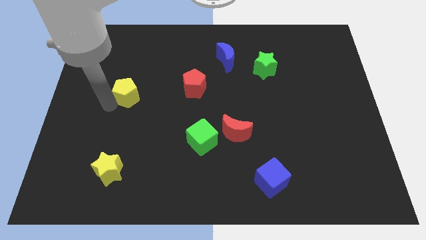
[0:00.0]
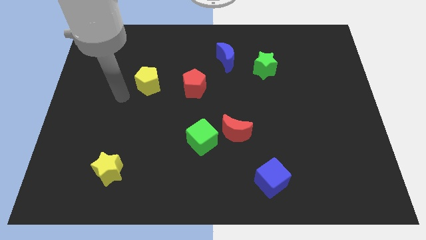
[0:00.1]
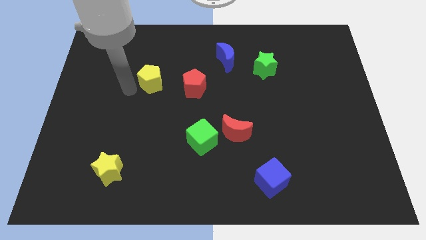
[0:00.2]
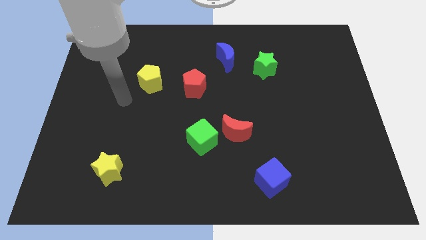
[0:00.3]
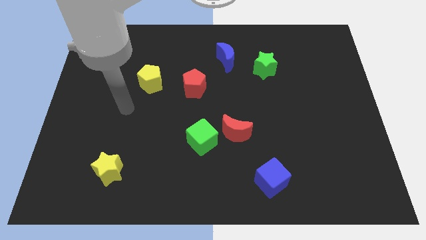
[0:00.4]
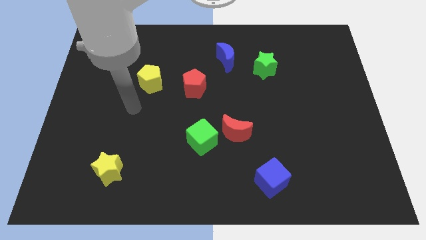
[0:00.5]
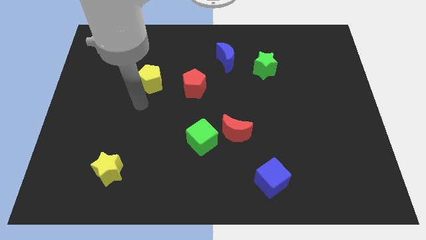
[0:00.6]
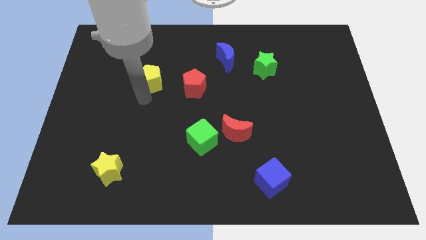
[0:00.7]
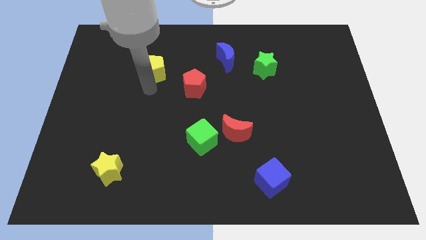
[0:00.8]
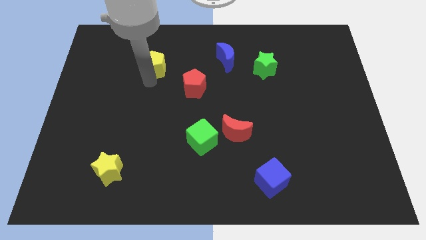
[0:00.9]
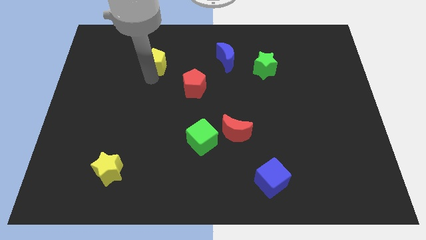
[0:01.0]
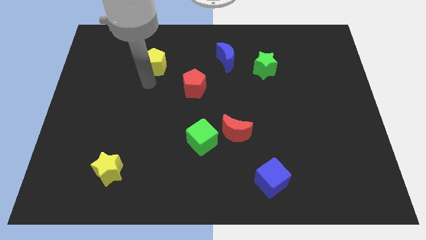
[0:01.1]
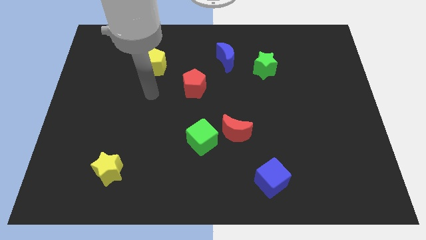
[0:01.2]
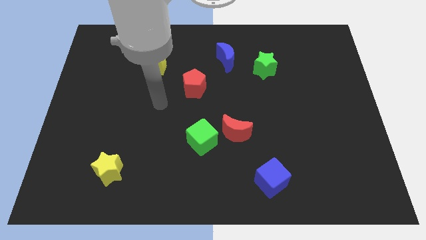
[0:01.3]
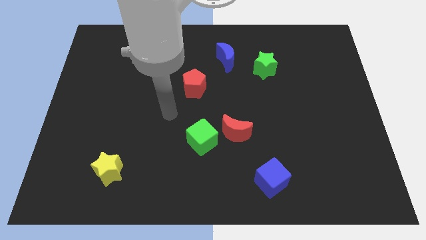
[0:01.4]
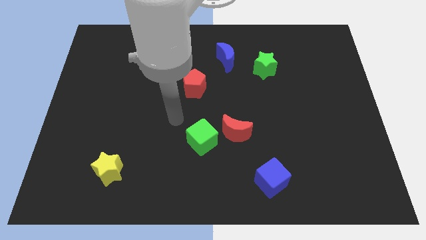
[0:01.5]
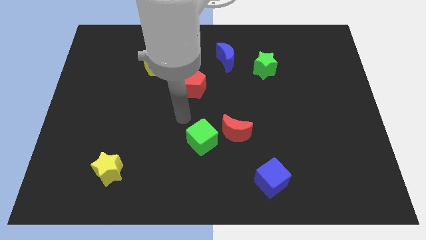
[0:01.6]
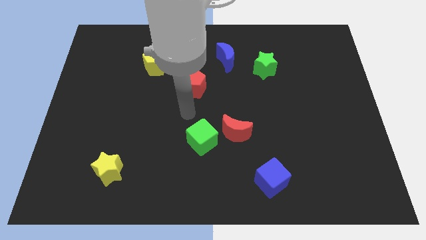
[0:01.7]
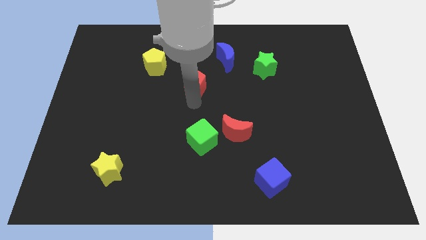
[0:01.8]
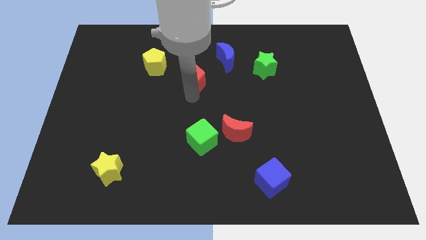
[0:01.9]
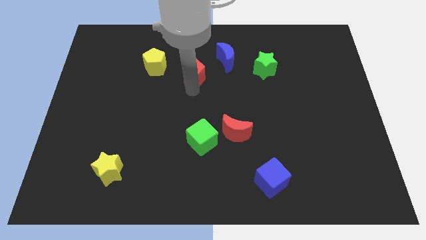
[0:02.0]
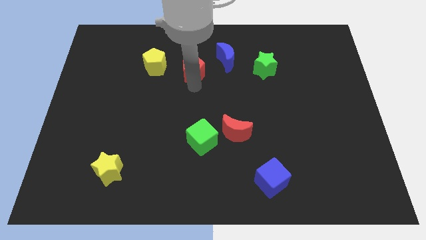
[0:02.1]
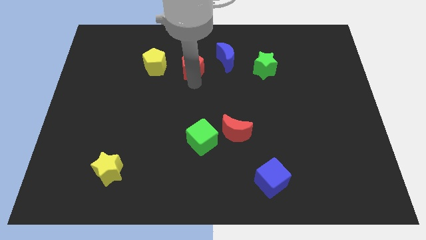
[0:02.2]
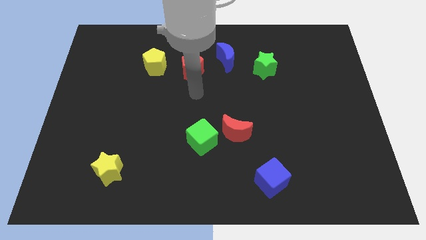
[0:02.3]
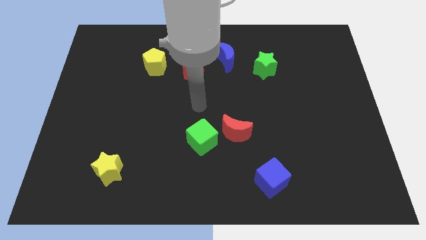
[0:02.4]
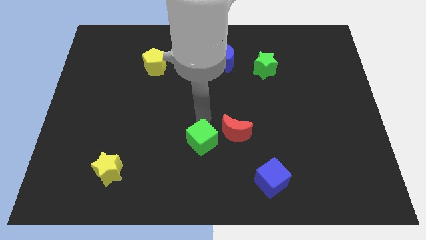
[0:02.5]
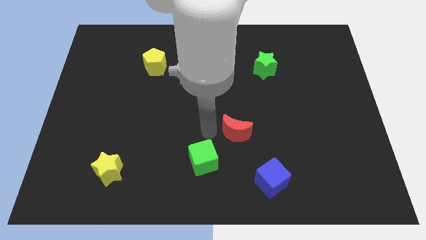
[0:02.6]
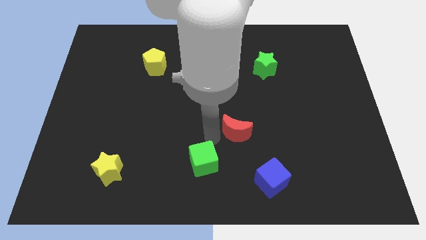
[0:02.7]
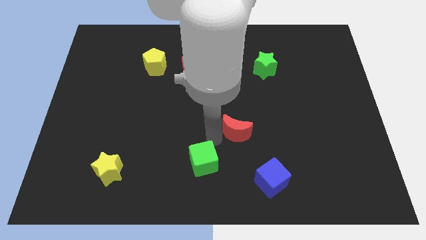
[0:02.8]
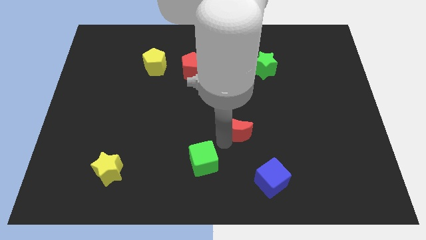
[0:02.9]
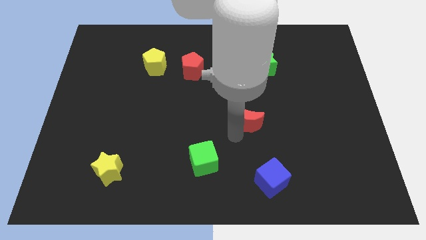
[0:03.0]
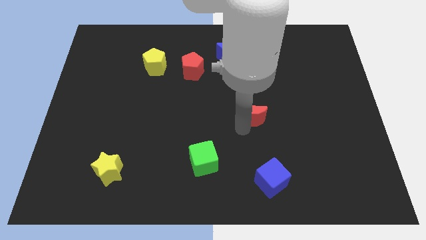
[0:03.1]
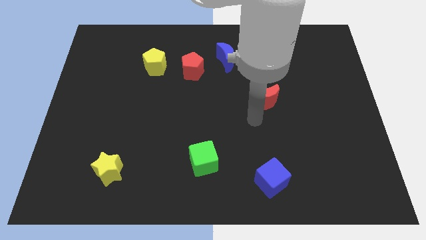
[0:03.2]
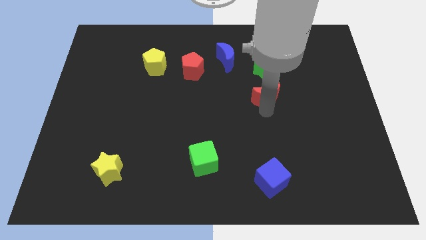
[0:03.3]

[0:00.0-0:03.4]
place red crescent below green star

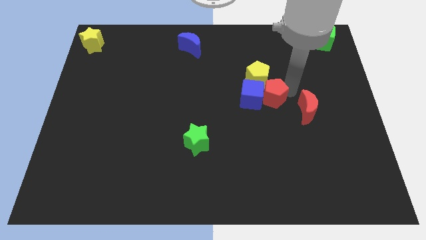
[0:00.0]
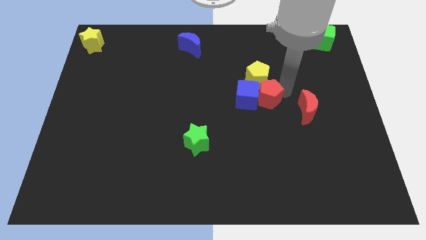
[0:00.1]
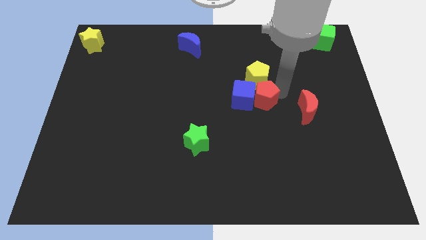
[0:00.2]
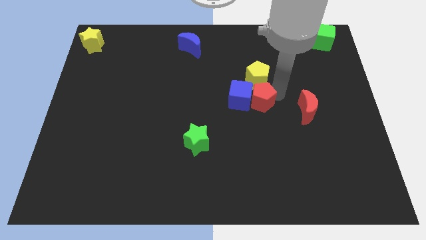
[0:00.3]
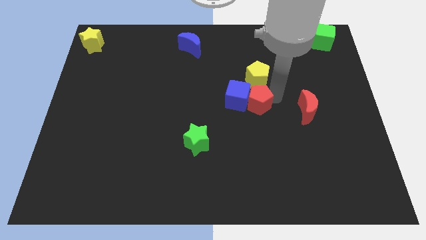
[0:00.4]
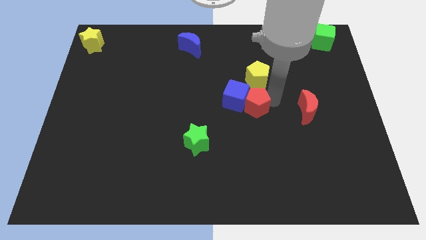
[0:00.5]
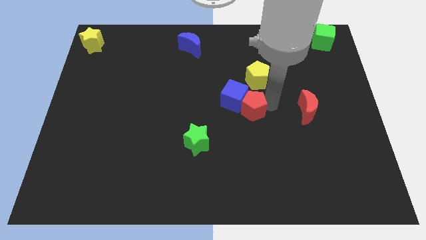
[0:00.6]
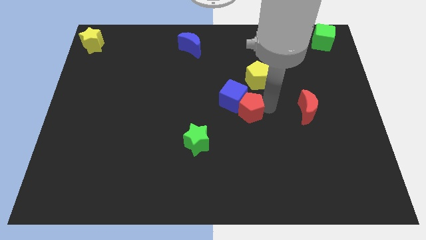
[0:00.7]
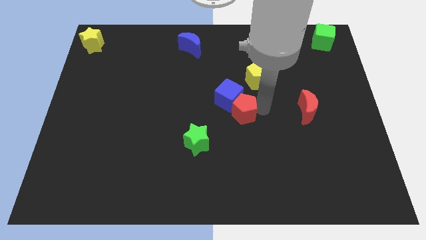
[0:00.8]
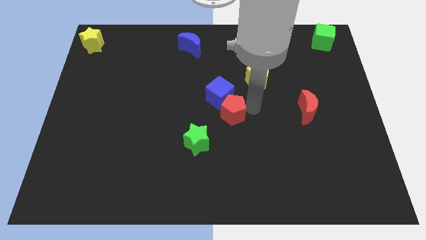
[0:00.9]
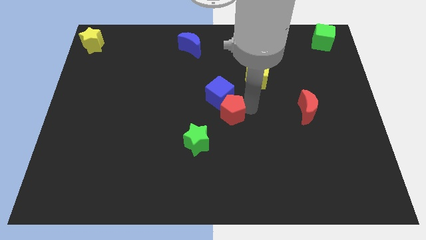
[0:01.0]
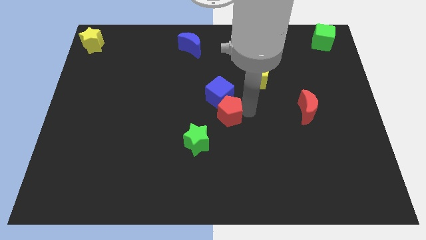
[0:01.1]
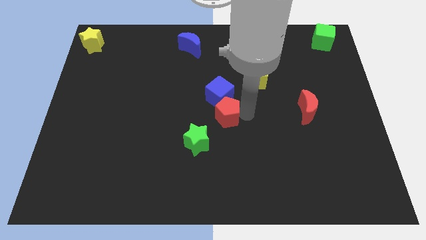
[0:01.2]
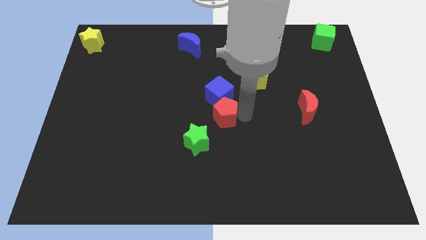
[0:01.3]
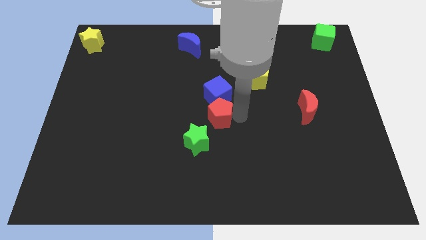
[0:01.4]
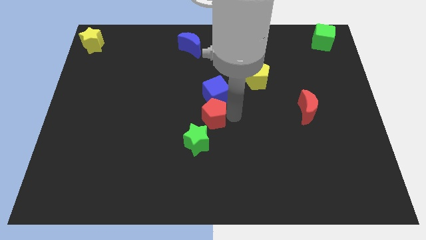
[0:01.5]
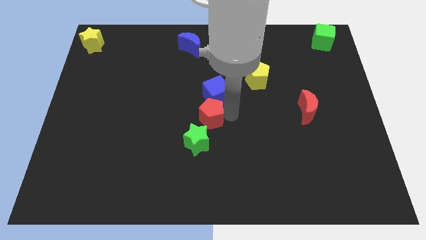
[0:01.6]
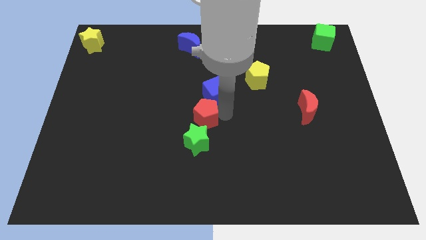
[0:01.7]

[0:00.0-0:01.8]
push the red pentagon to the bottom of the blue cube

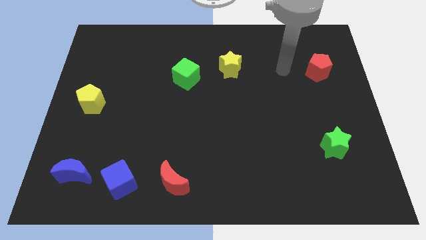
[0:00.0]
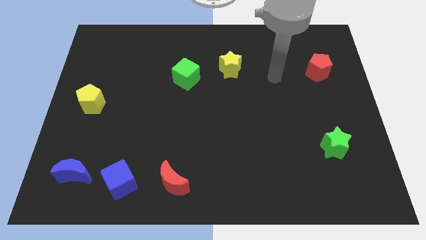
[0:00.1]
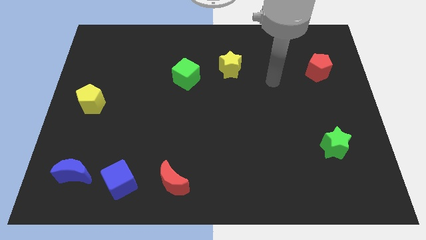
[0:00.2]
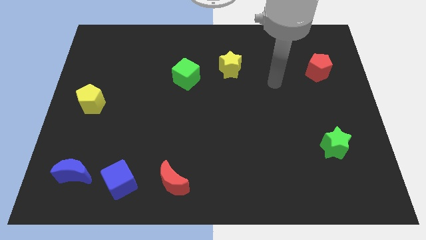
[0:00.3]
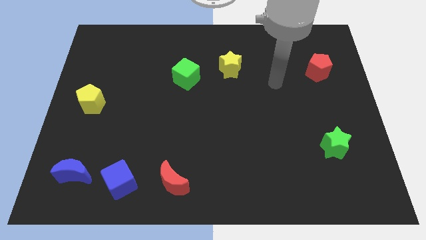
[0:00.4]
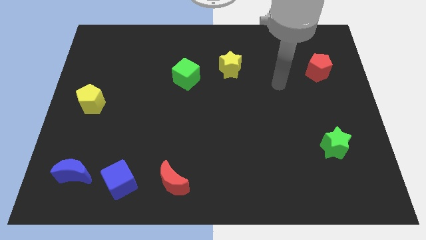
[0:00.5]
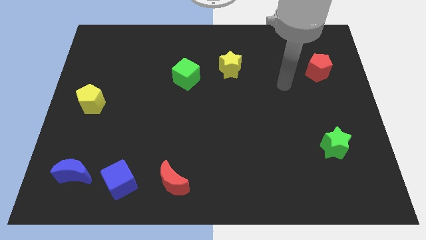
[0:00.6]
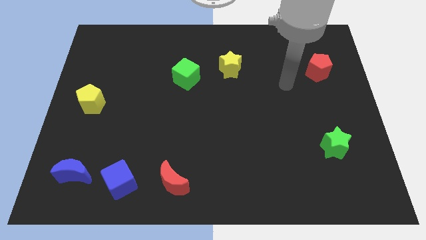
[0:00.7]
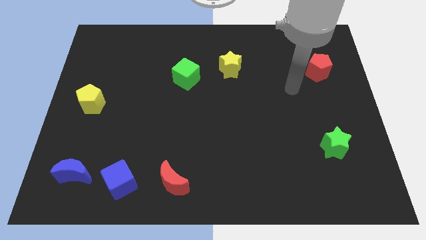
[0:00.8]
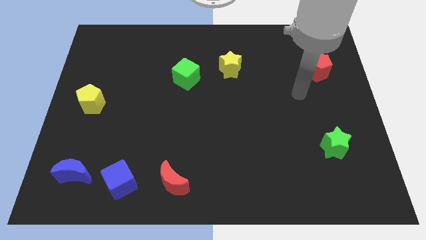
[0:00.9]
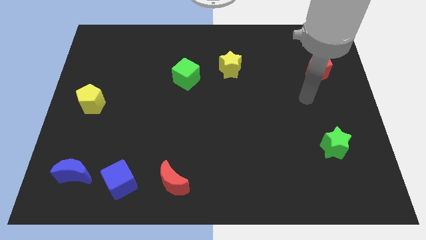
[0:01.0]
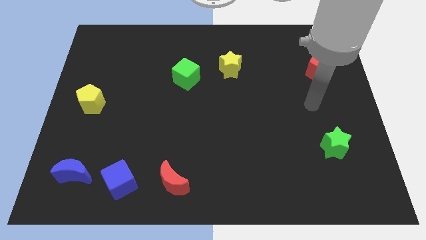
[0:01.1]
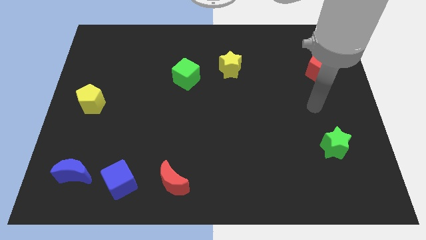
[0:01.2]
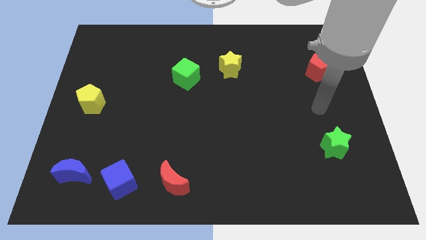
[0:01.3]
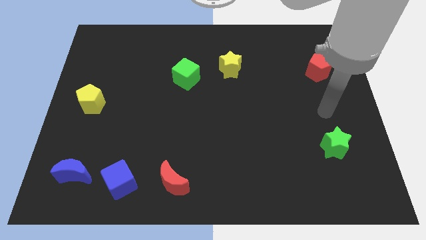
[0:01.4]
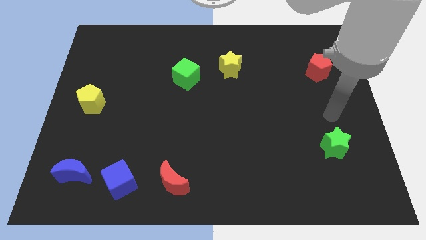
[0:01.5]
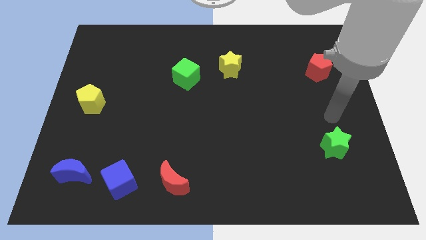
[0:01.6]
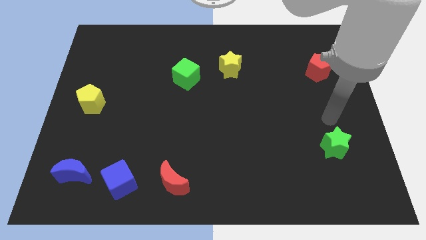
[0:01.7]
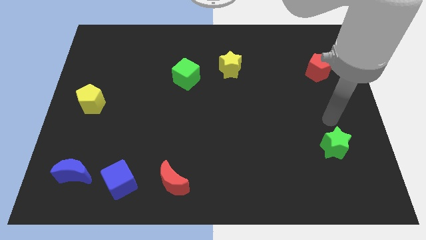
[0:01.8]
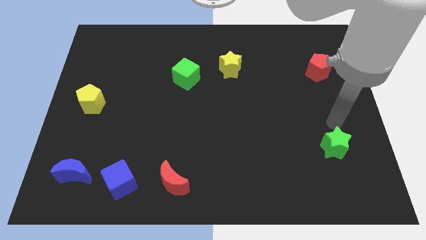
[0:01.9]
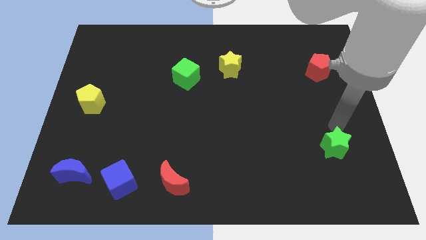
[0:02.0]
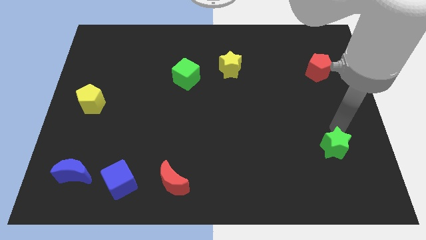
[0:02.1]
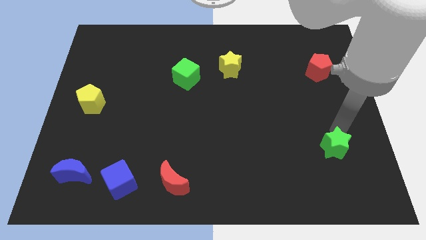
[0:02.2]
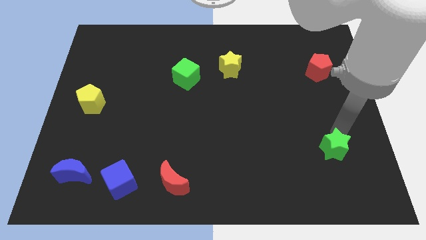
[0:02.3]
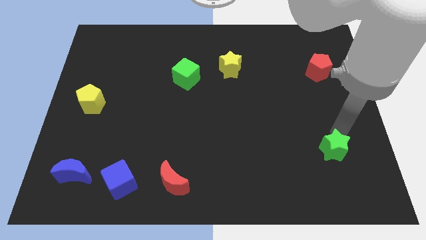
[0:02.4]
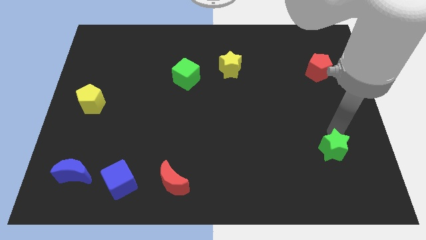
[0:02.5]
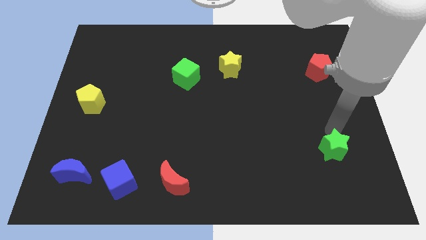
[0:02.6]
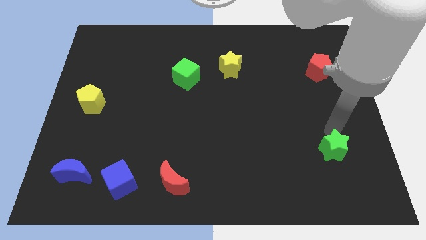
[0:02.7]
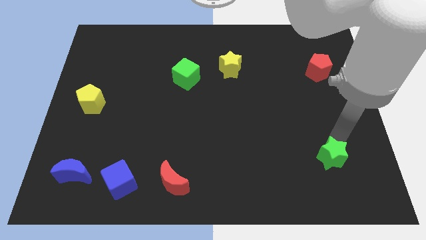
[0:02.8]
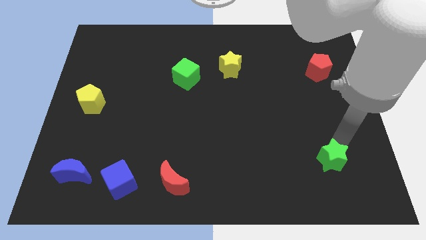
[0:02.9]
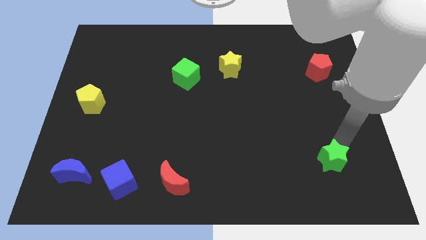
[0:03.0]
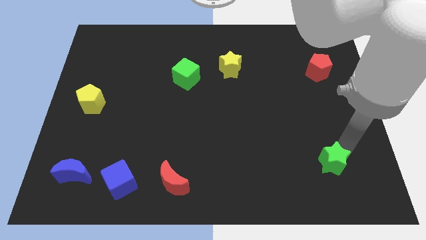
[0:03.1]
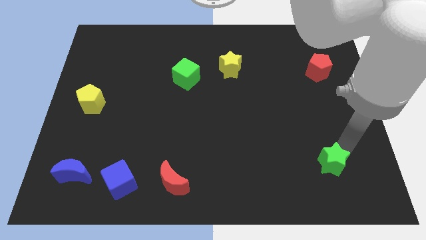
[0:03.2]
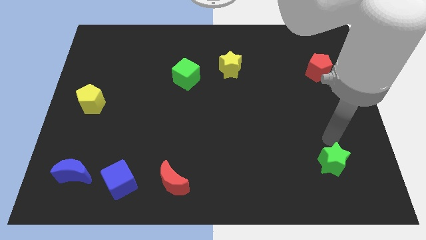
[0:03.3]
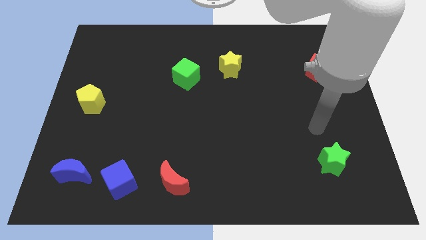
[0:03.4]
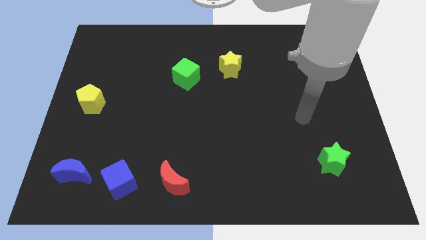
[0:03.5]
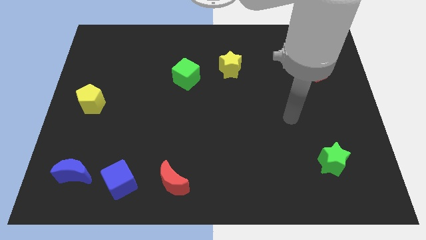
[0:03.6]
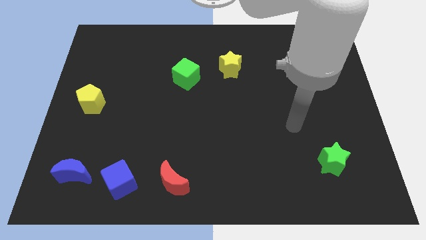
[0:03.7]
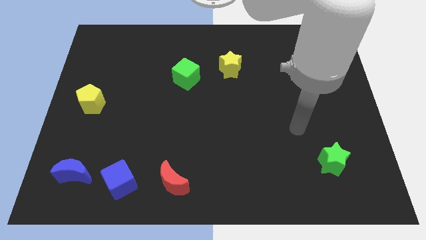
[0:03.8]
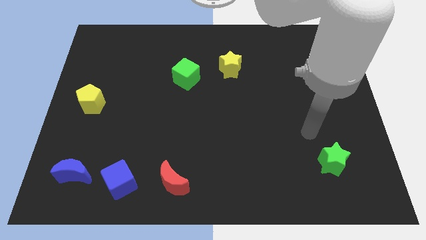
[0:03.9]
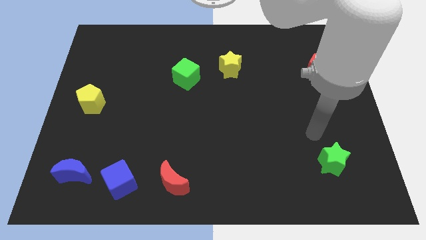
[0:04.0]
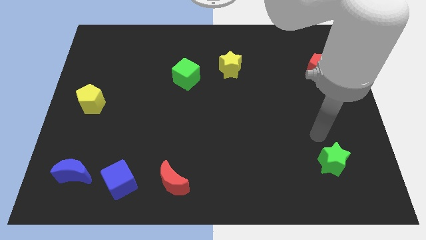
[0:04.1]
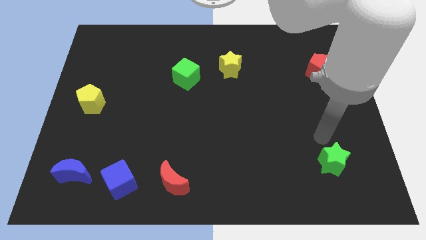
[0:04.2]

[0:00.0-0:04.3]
push the green star downwards slightly
